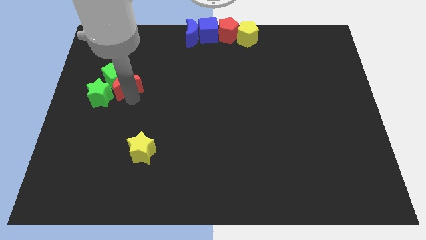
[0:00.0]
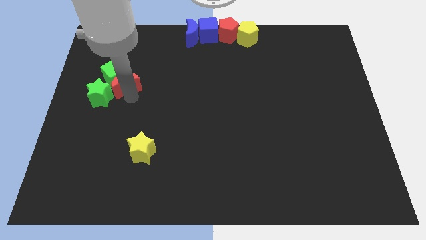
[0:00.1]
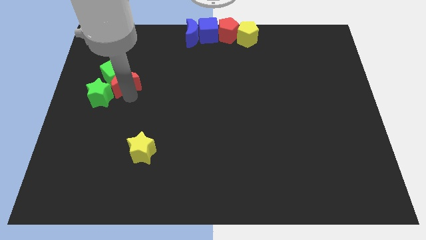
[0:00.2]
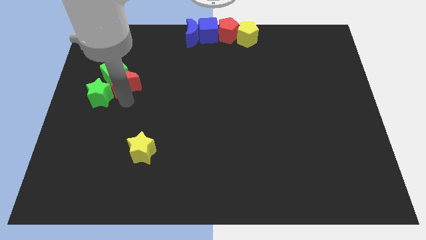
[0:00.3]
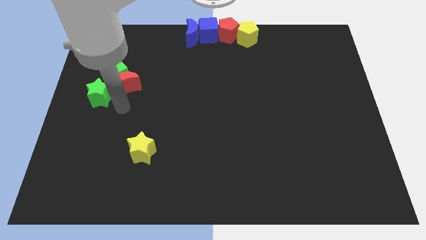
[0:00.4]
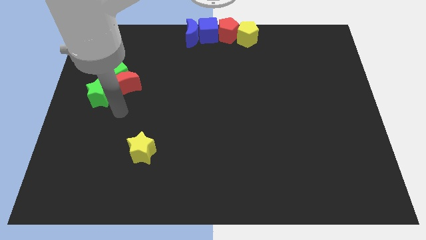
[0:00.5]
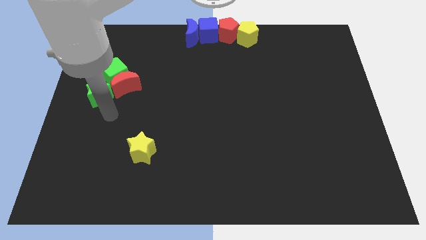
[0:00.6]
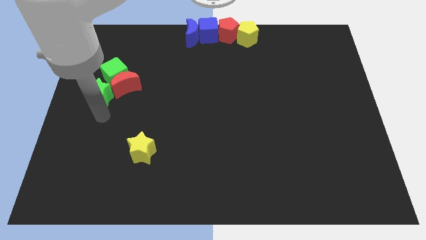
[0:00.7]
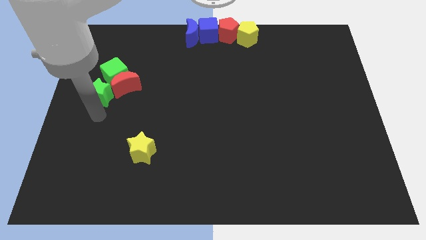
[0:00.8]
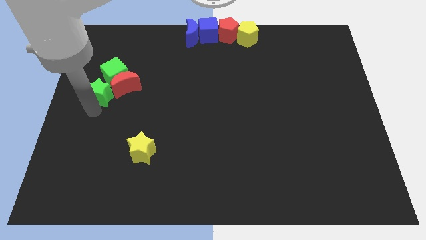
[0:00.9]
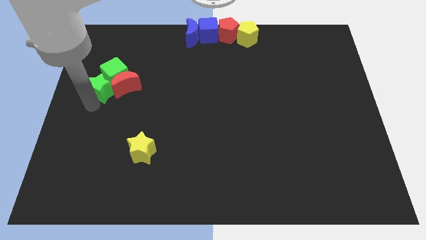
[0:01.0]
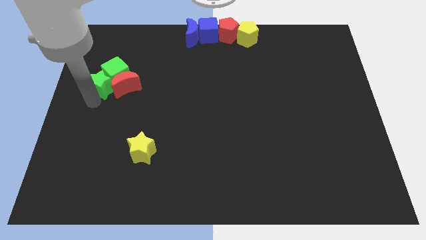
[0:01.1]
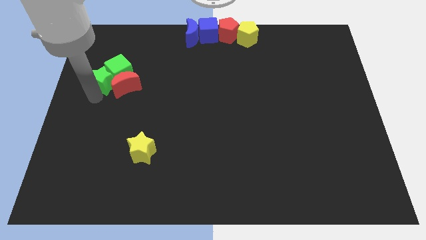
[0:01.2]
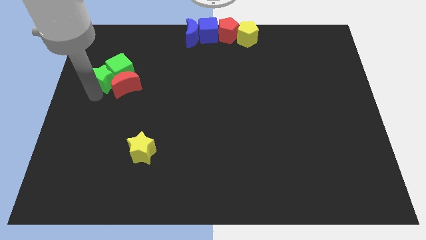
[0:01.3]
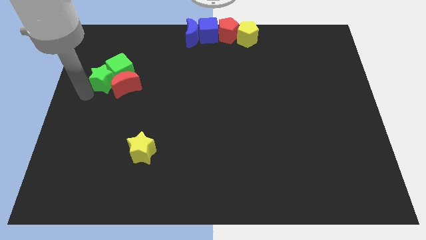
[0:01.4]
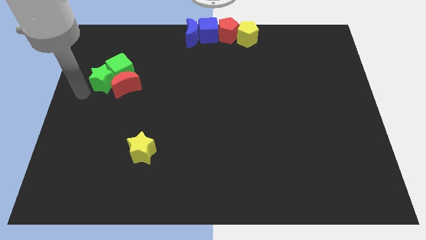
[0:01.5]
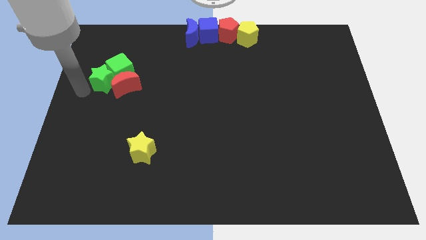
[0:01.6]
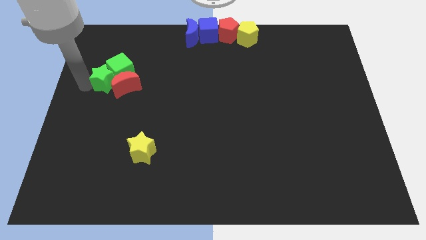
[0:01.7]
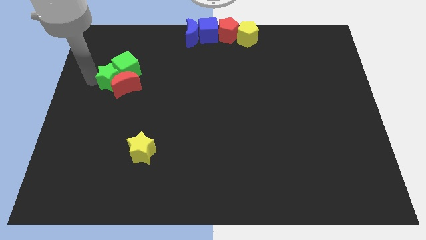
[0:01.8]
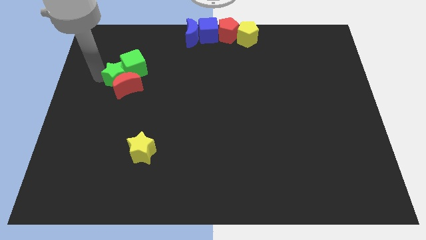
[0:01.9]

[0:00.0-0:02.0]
push the green star into green cube diagonally

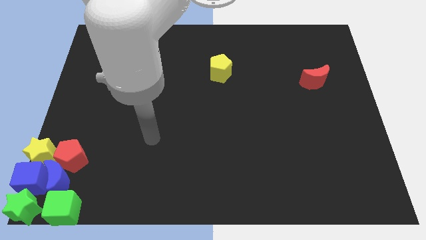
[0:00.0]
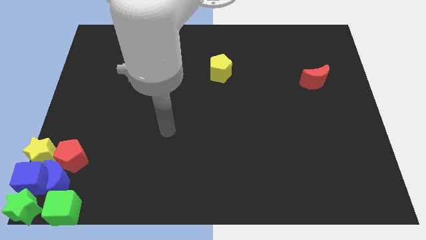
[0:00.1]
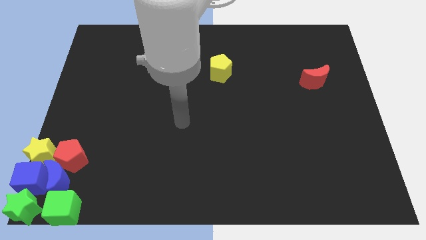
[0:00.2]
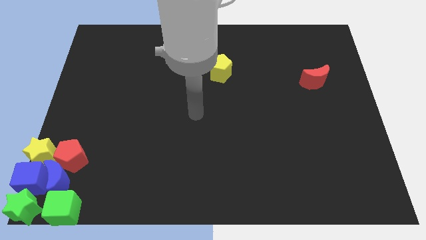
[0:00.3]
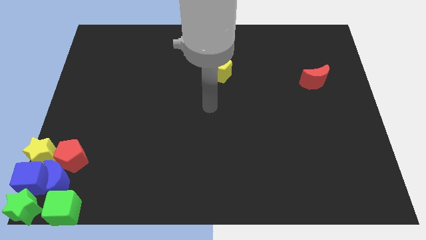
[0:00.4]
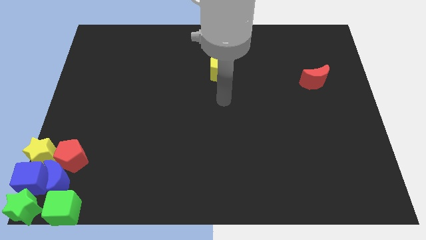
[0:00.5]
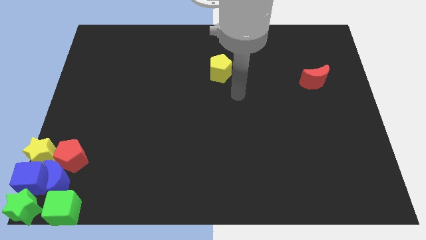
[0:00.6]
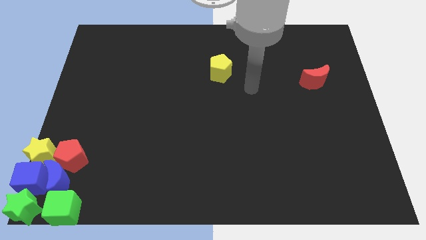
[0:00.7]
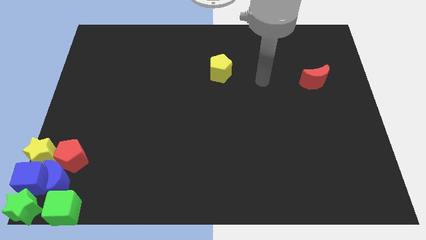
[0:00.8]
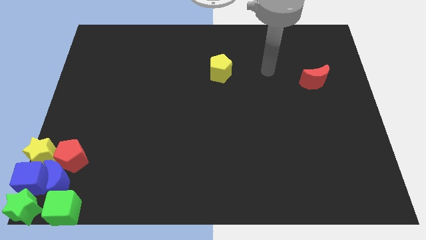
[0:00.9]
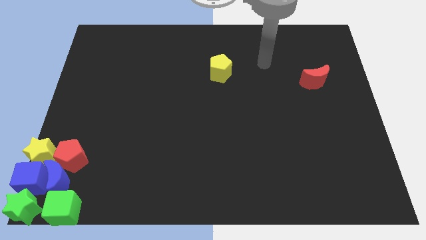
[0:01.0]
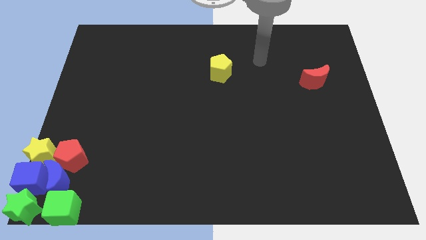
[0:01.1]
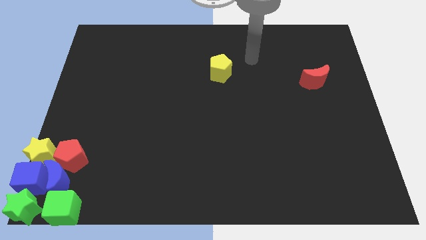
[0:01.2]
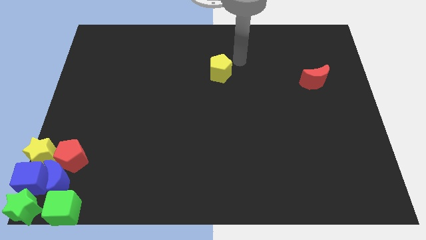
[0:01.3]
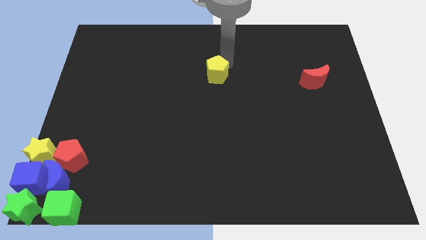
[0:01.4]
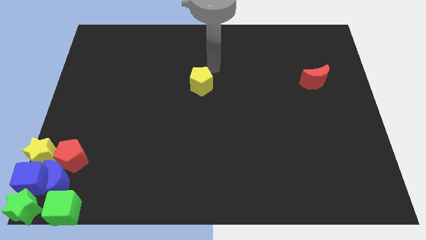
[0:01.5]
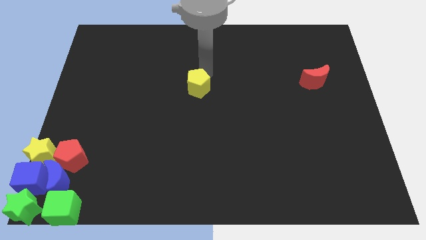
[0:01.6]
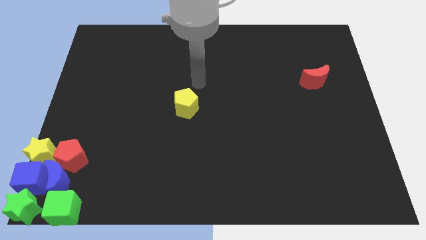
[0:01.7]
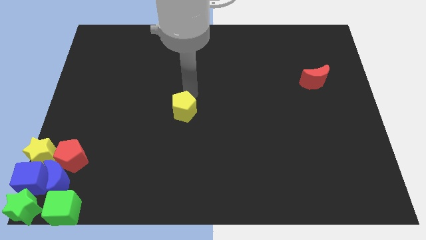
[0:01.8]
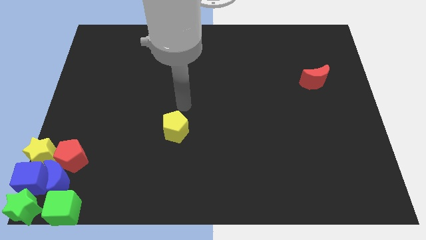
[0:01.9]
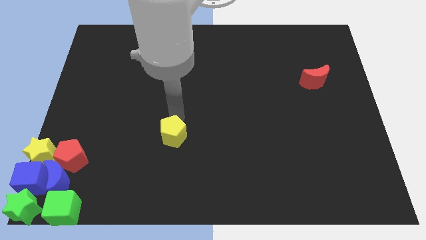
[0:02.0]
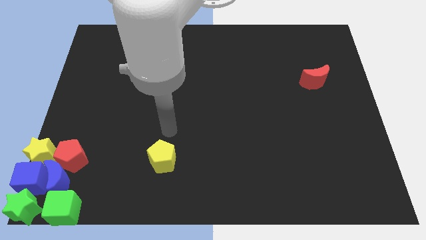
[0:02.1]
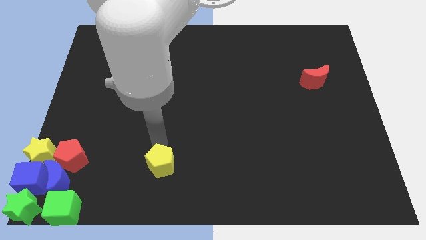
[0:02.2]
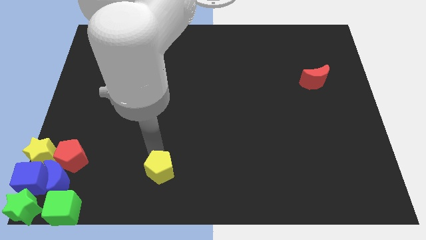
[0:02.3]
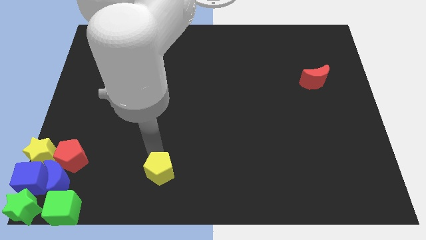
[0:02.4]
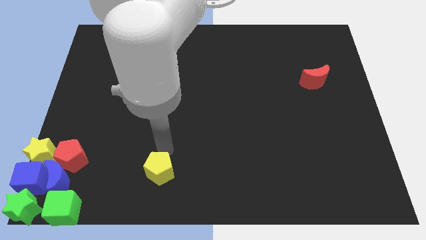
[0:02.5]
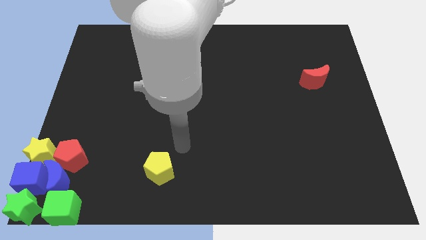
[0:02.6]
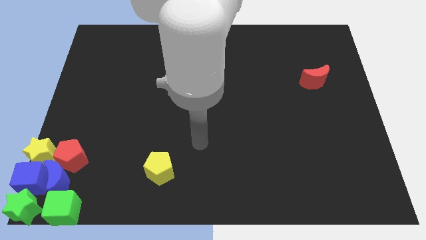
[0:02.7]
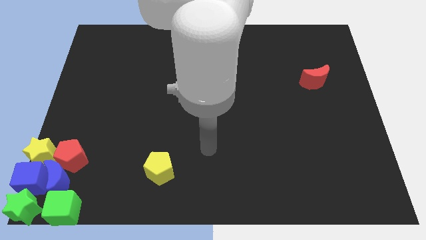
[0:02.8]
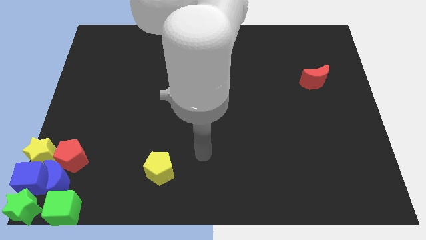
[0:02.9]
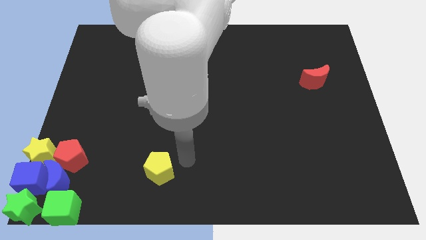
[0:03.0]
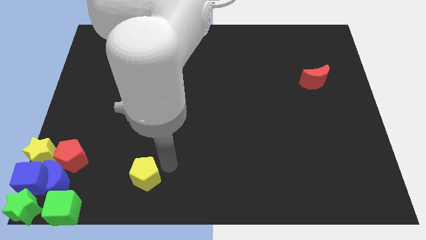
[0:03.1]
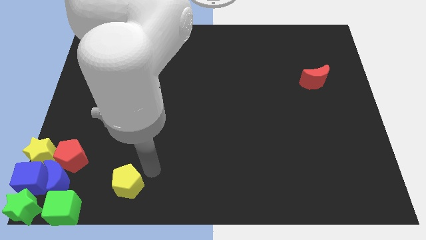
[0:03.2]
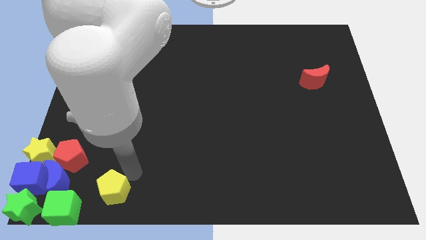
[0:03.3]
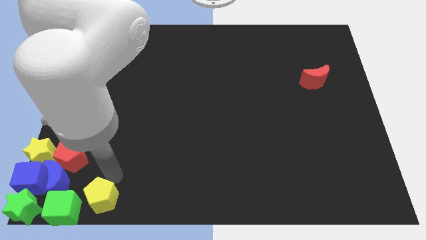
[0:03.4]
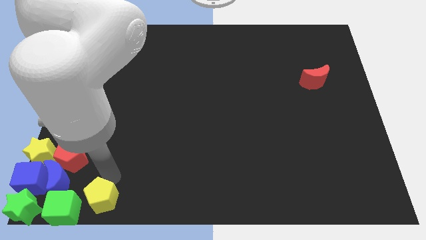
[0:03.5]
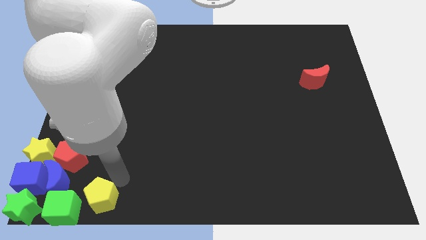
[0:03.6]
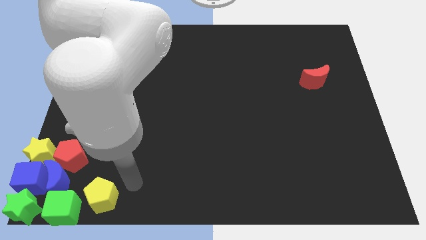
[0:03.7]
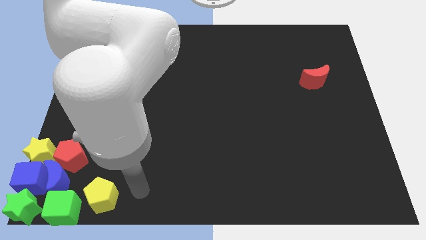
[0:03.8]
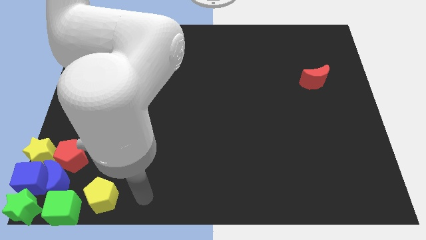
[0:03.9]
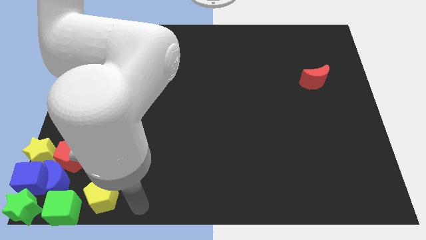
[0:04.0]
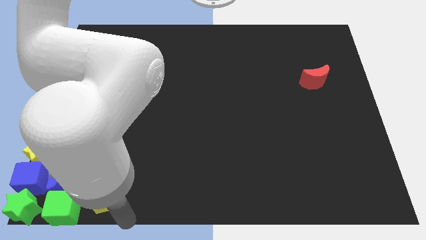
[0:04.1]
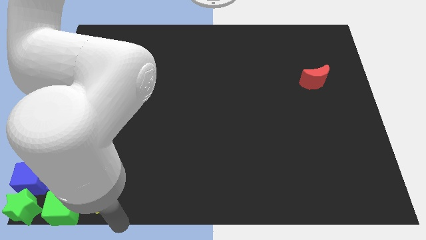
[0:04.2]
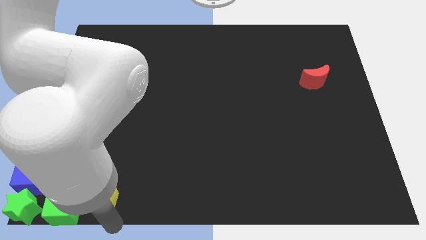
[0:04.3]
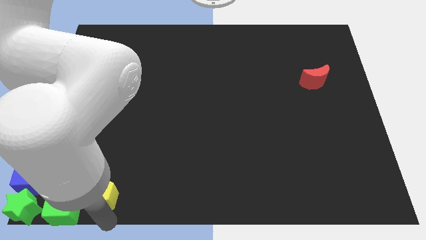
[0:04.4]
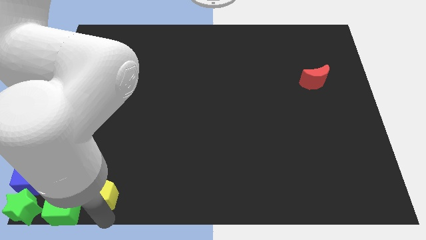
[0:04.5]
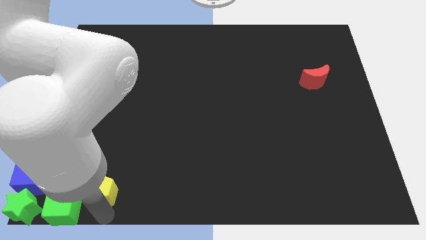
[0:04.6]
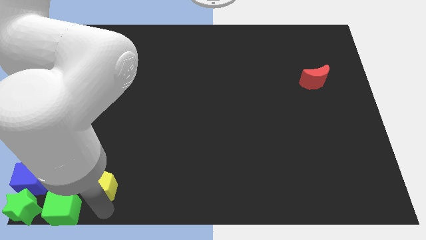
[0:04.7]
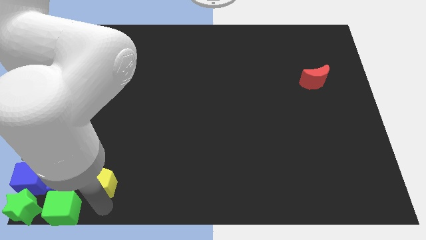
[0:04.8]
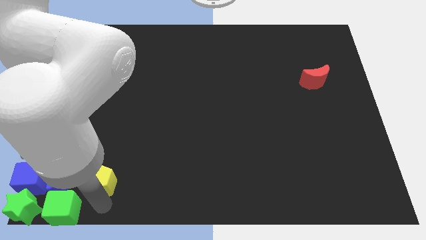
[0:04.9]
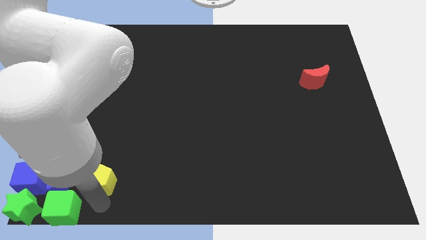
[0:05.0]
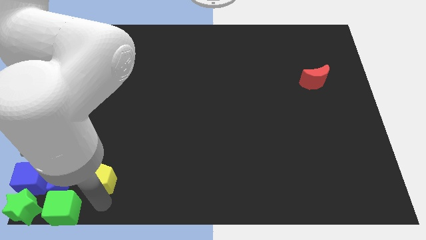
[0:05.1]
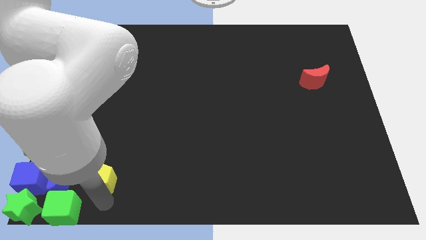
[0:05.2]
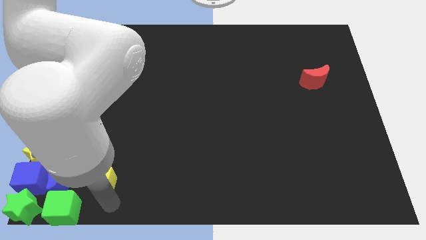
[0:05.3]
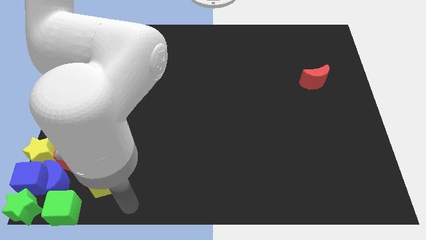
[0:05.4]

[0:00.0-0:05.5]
move yellow pentagon to bottom left of the board

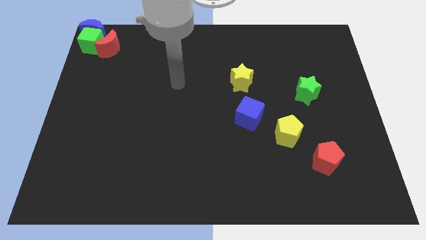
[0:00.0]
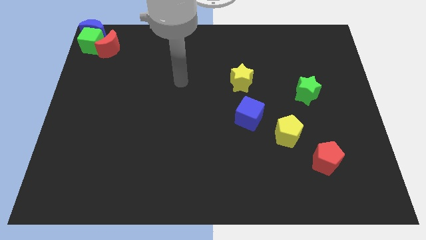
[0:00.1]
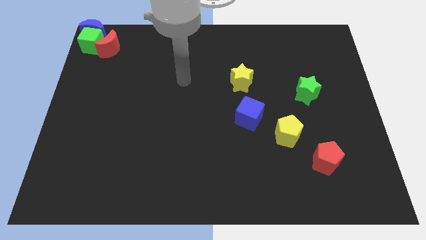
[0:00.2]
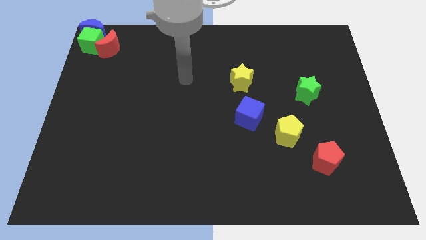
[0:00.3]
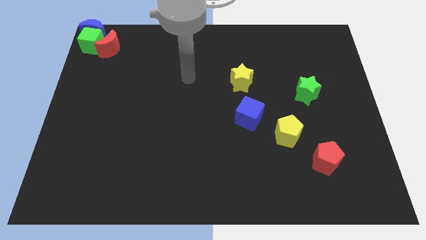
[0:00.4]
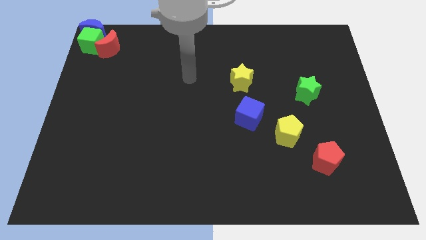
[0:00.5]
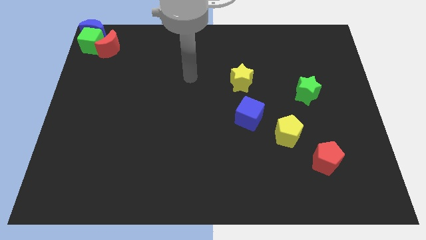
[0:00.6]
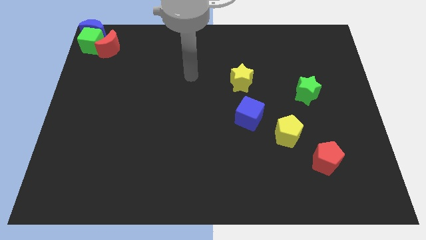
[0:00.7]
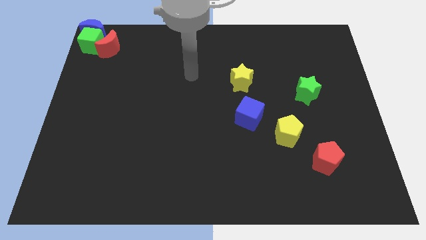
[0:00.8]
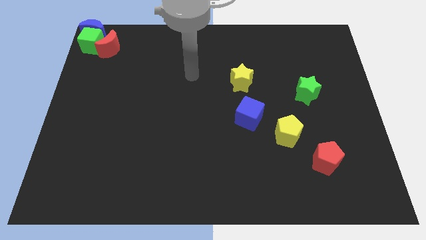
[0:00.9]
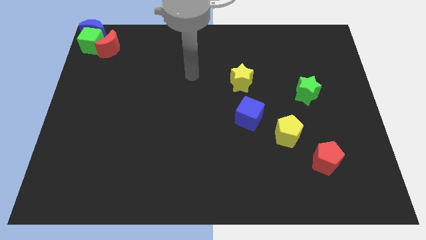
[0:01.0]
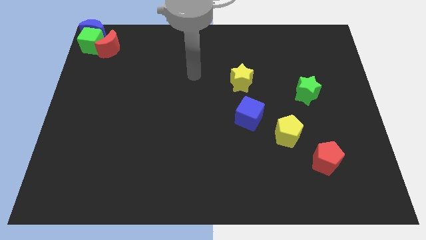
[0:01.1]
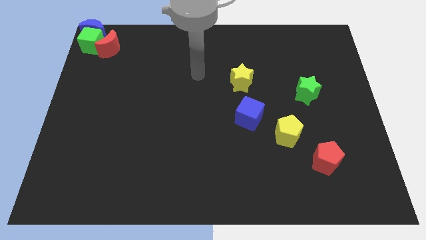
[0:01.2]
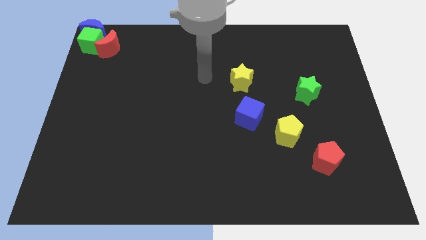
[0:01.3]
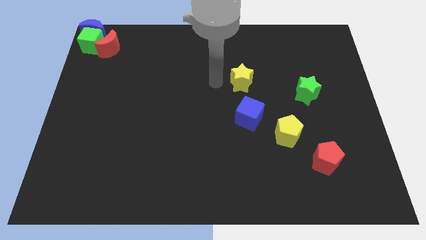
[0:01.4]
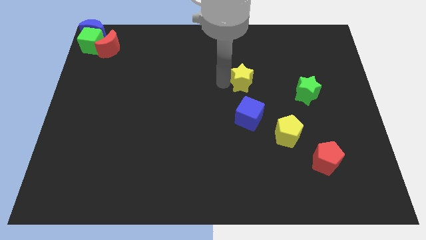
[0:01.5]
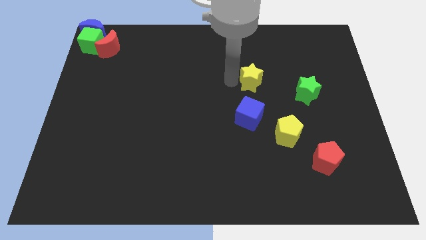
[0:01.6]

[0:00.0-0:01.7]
place the arm left to the yellow star
